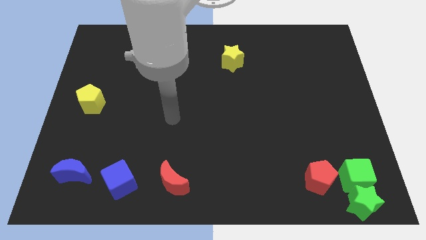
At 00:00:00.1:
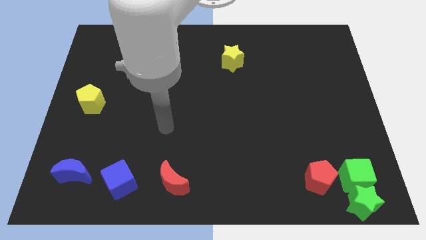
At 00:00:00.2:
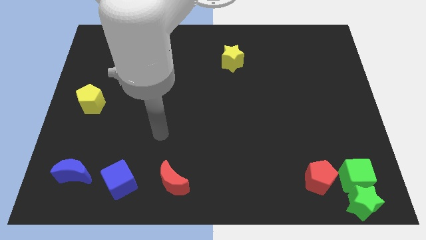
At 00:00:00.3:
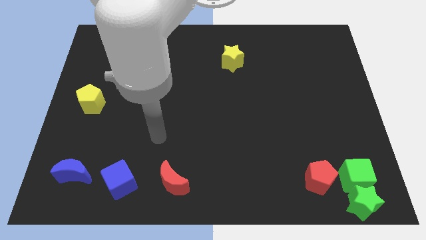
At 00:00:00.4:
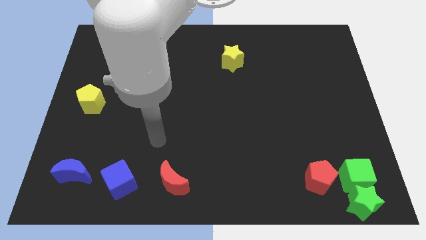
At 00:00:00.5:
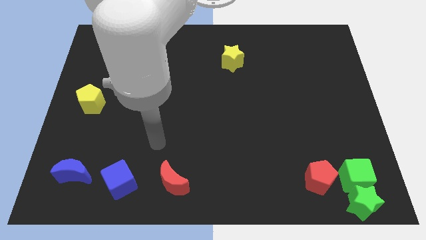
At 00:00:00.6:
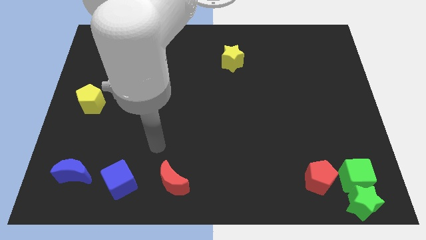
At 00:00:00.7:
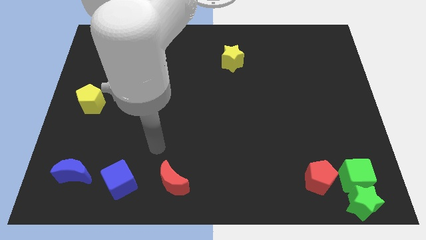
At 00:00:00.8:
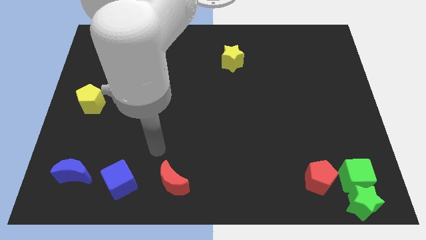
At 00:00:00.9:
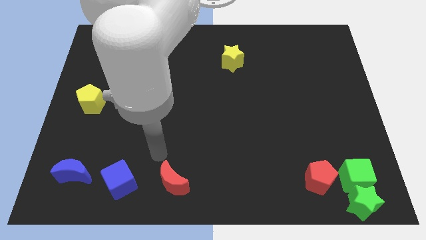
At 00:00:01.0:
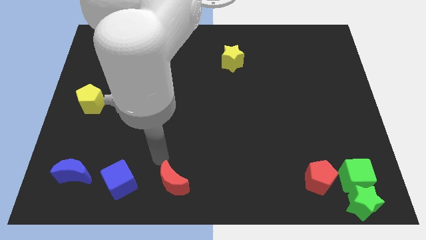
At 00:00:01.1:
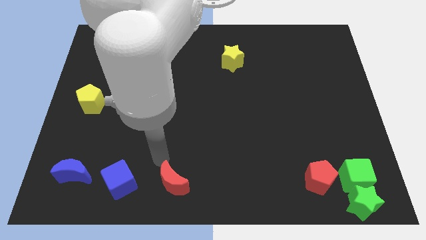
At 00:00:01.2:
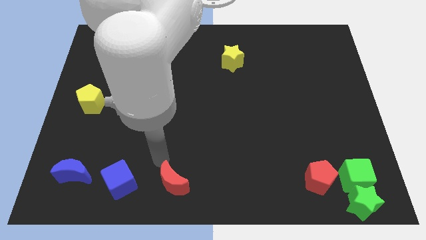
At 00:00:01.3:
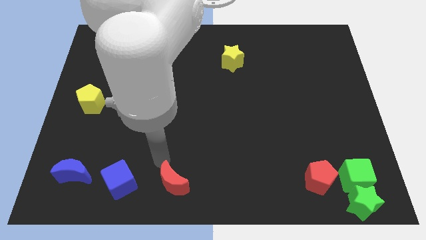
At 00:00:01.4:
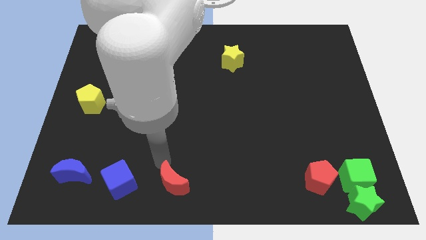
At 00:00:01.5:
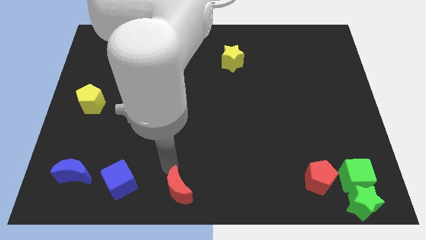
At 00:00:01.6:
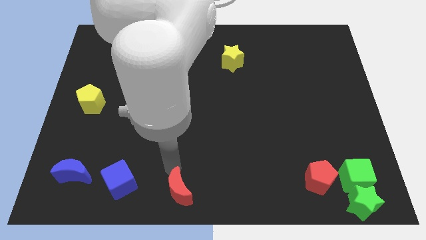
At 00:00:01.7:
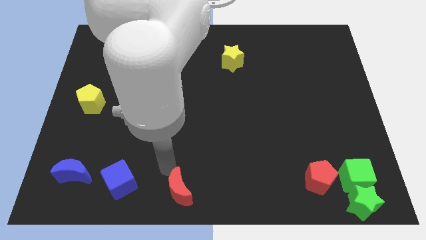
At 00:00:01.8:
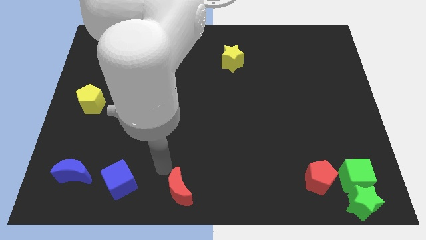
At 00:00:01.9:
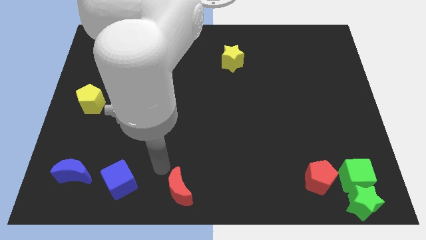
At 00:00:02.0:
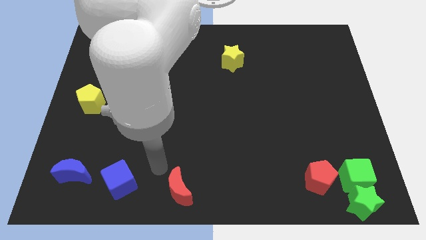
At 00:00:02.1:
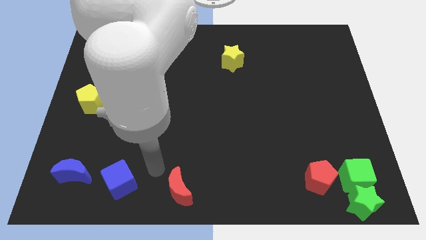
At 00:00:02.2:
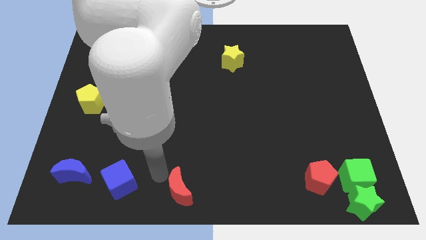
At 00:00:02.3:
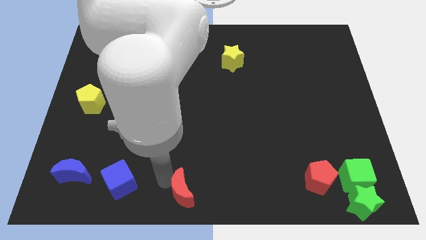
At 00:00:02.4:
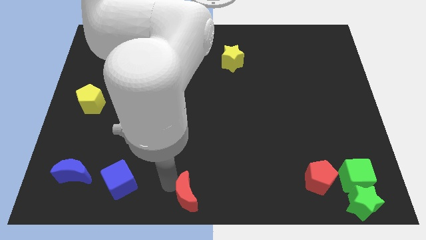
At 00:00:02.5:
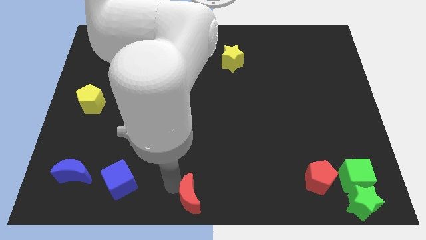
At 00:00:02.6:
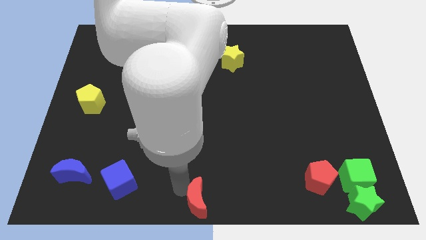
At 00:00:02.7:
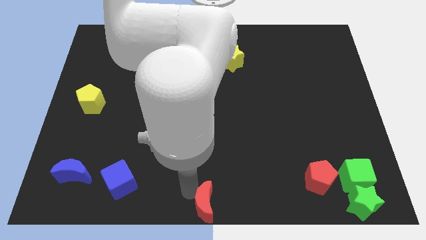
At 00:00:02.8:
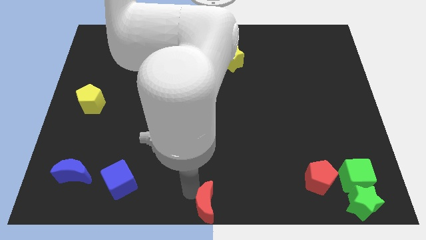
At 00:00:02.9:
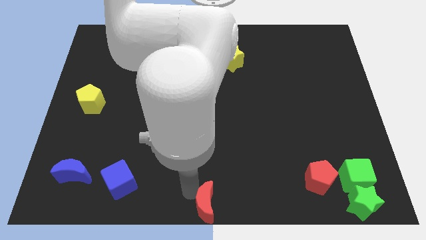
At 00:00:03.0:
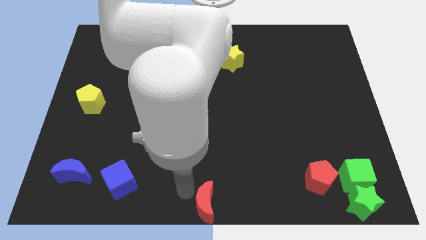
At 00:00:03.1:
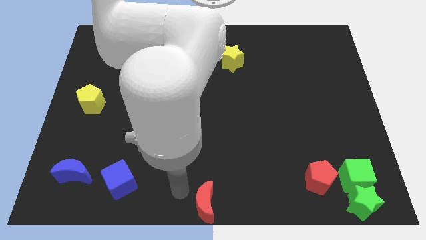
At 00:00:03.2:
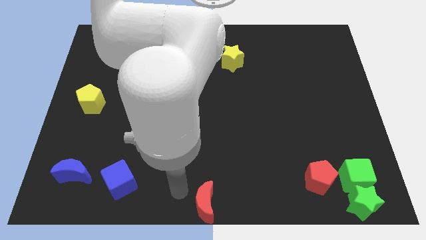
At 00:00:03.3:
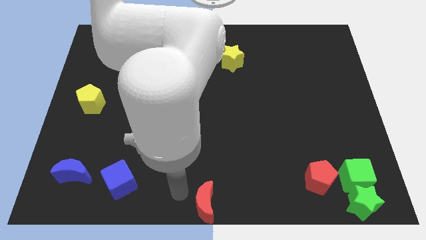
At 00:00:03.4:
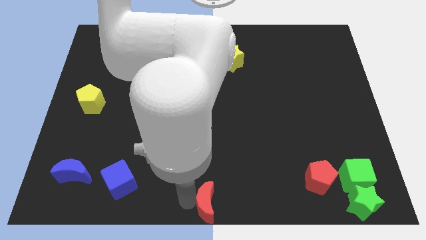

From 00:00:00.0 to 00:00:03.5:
move the red moon to the bottom center of the board

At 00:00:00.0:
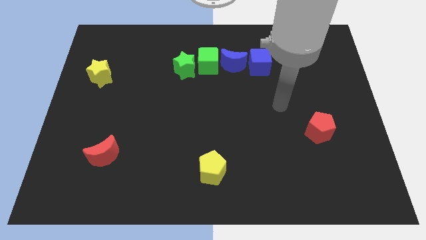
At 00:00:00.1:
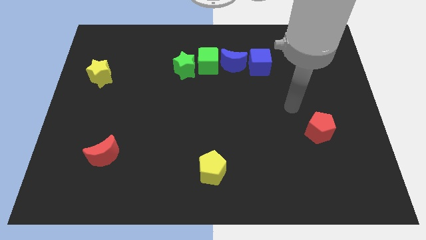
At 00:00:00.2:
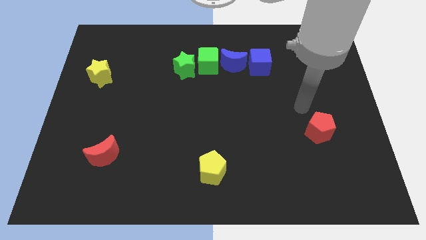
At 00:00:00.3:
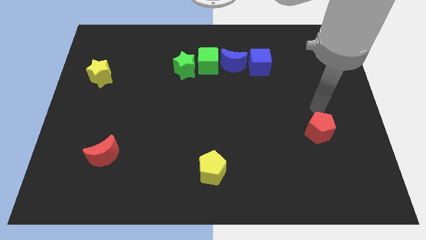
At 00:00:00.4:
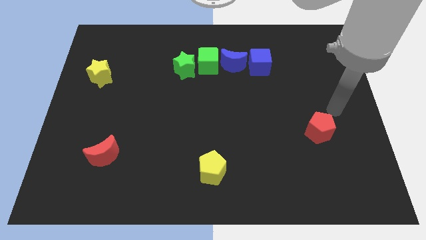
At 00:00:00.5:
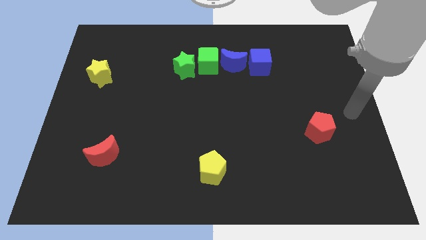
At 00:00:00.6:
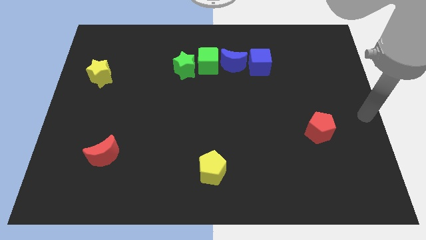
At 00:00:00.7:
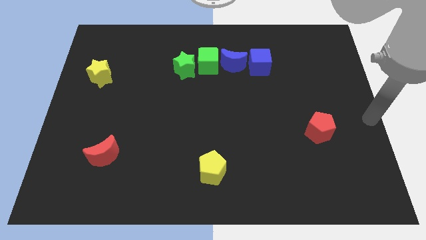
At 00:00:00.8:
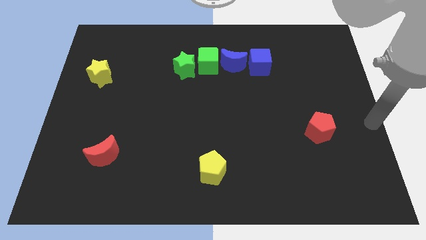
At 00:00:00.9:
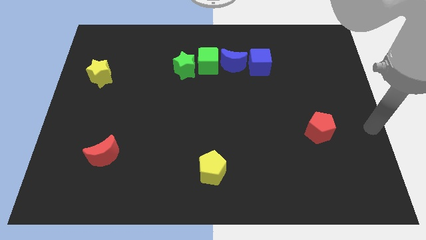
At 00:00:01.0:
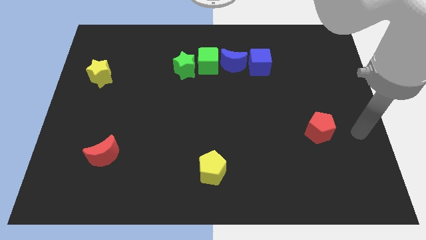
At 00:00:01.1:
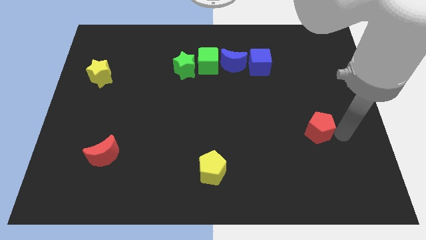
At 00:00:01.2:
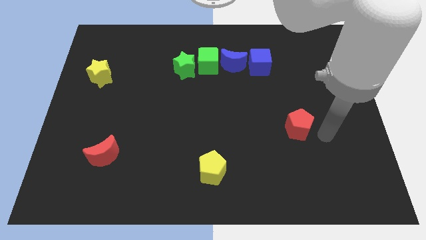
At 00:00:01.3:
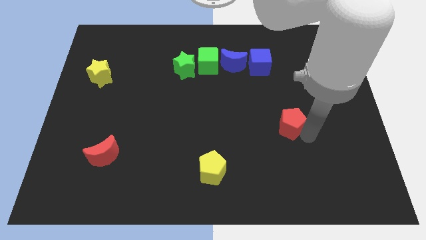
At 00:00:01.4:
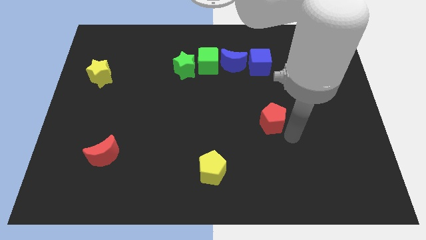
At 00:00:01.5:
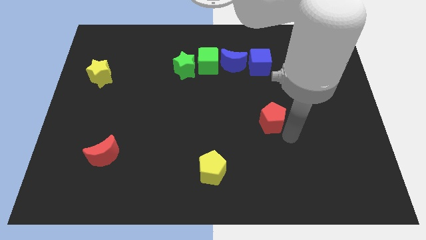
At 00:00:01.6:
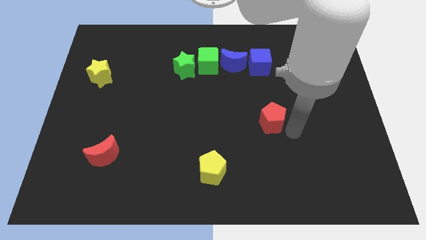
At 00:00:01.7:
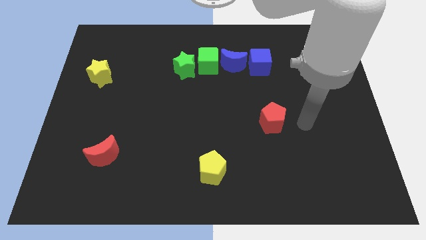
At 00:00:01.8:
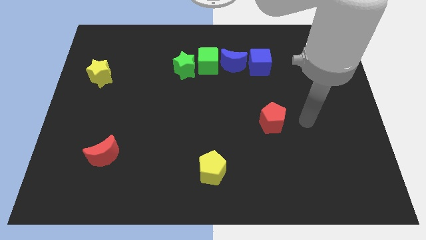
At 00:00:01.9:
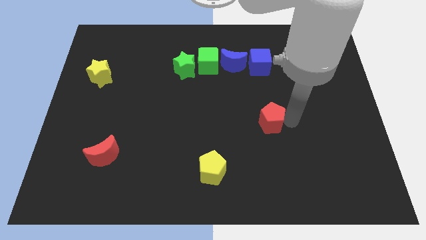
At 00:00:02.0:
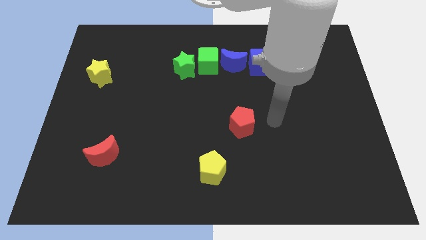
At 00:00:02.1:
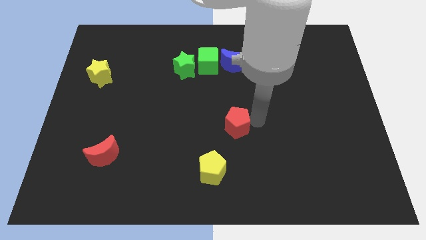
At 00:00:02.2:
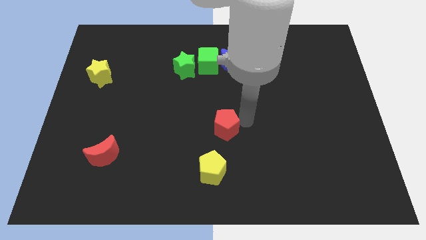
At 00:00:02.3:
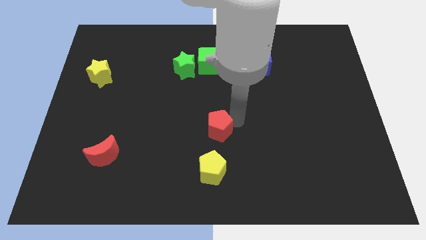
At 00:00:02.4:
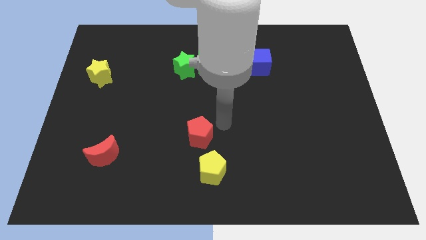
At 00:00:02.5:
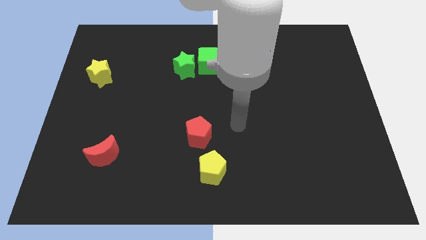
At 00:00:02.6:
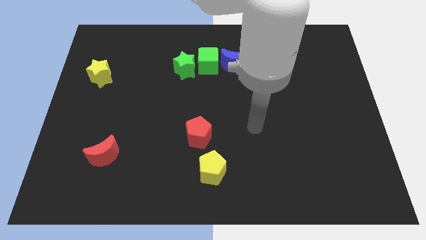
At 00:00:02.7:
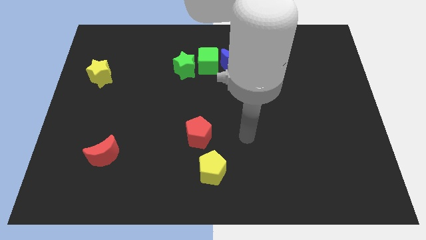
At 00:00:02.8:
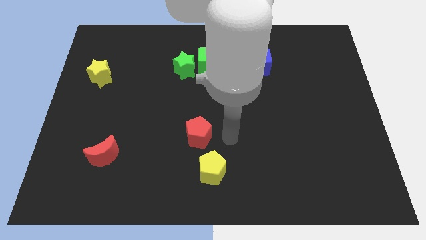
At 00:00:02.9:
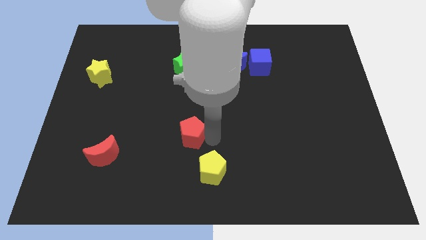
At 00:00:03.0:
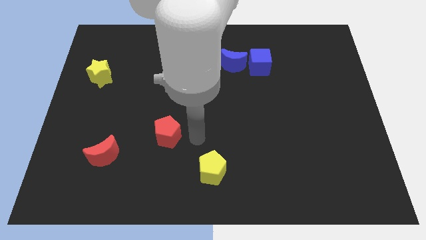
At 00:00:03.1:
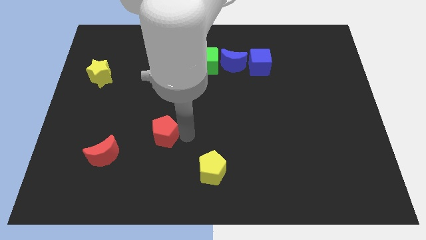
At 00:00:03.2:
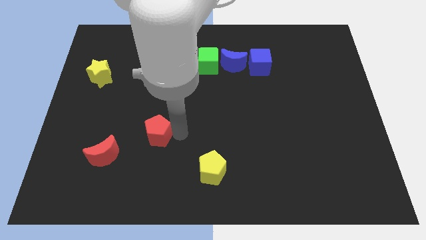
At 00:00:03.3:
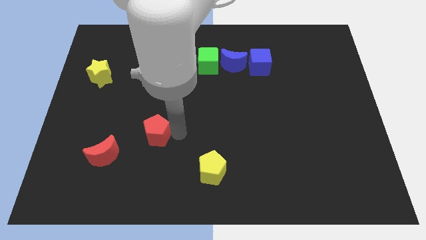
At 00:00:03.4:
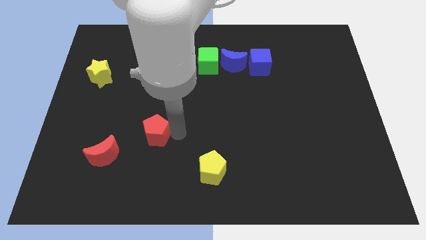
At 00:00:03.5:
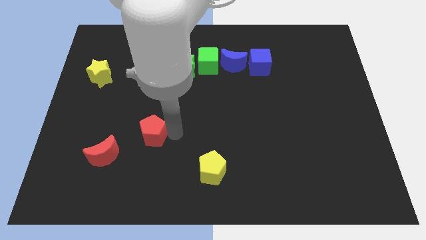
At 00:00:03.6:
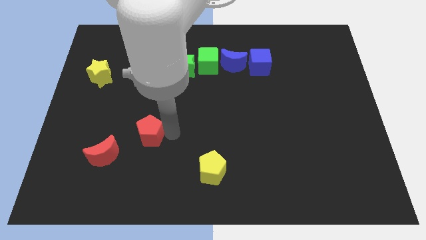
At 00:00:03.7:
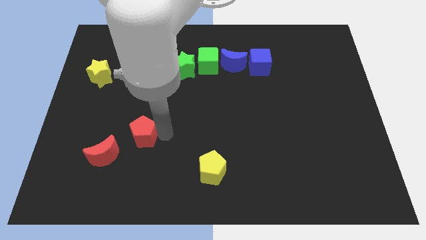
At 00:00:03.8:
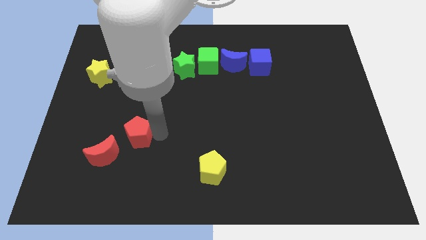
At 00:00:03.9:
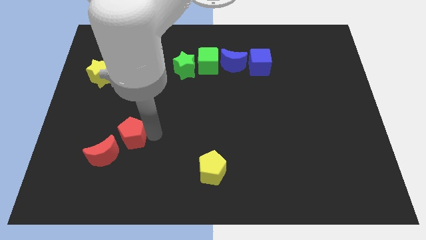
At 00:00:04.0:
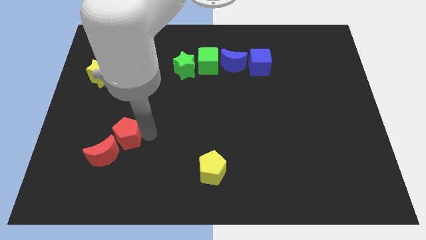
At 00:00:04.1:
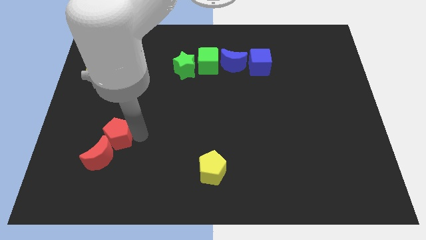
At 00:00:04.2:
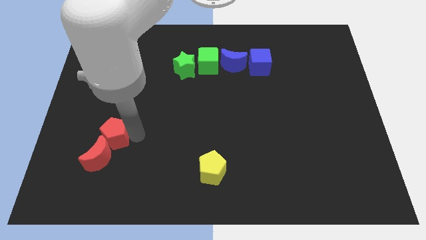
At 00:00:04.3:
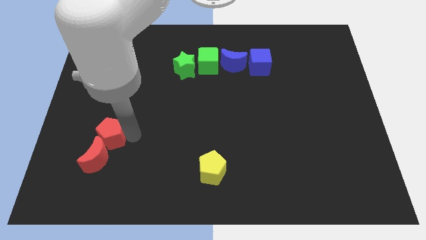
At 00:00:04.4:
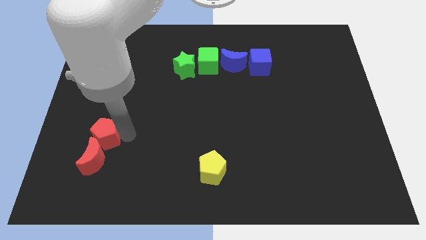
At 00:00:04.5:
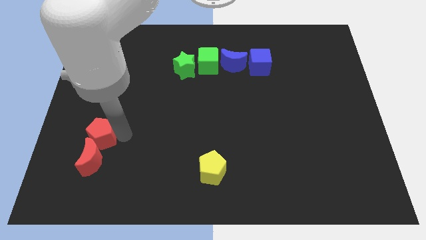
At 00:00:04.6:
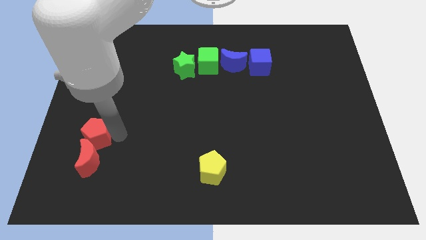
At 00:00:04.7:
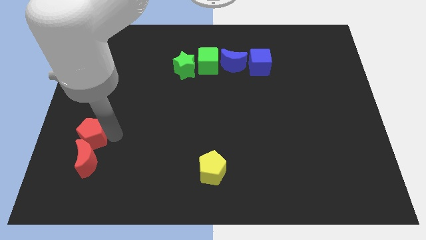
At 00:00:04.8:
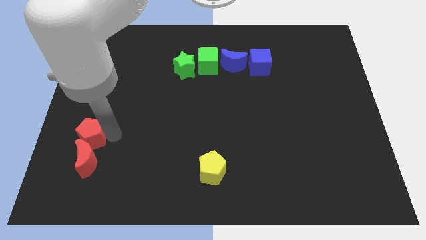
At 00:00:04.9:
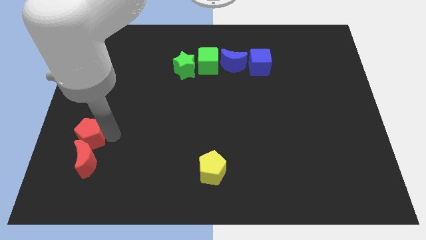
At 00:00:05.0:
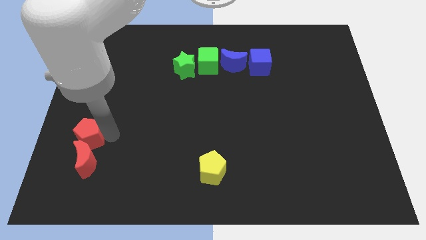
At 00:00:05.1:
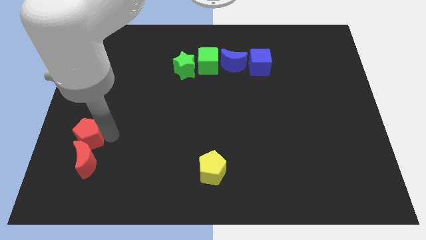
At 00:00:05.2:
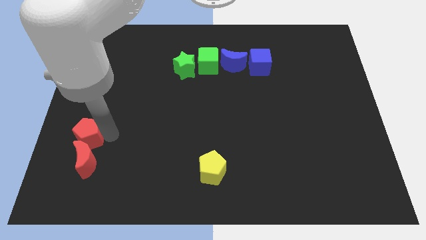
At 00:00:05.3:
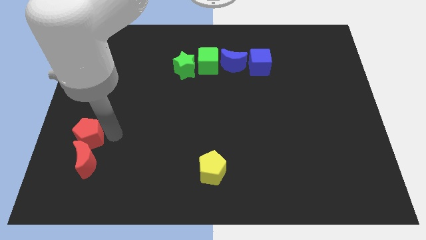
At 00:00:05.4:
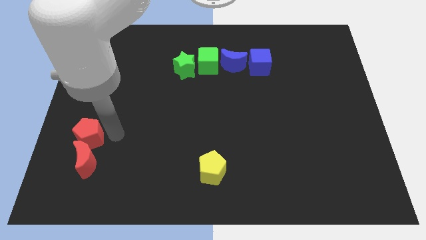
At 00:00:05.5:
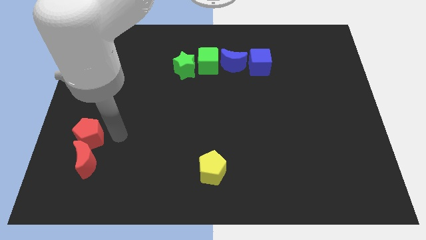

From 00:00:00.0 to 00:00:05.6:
place the red pentagon top of the red crescent
